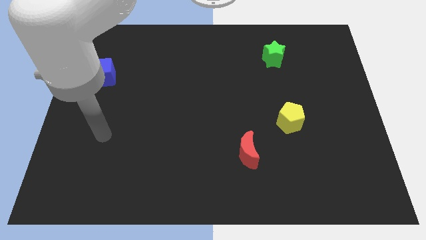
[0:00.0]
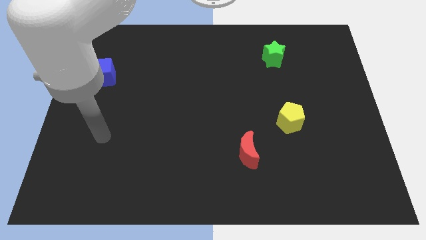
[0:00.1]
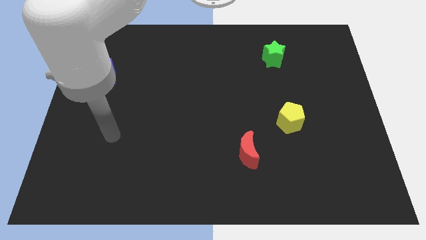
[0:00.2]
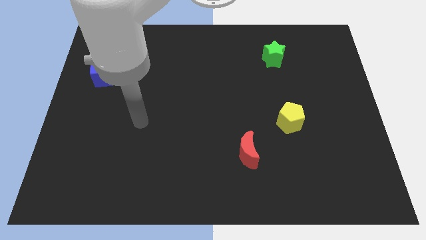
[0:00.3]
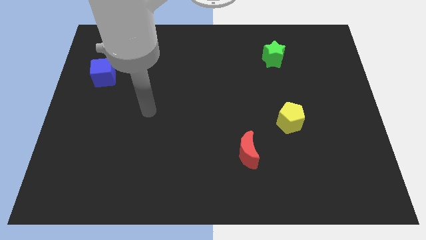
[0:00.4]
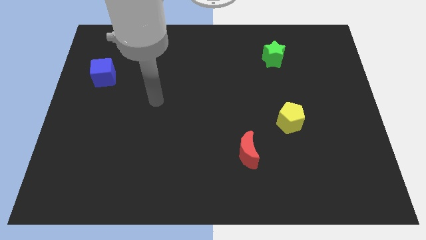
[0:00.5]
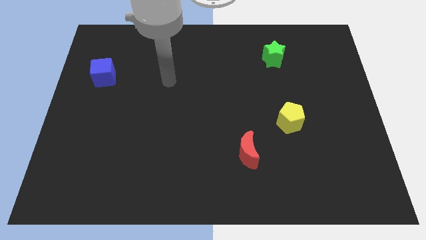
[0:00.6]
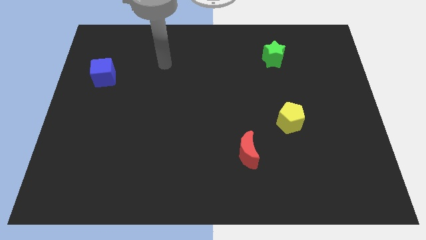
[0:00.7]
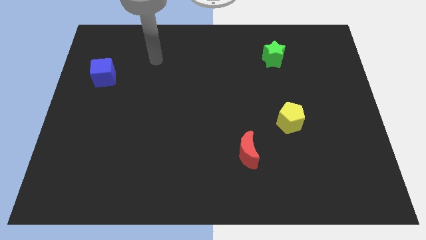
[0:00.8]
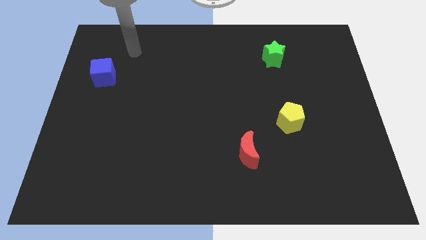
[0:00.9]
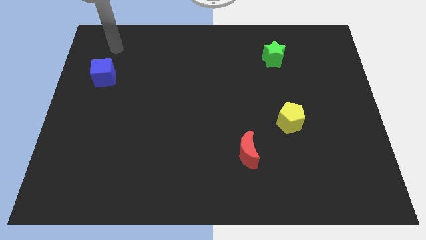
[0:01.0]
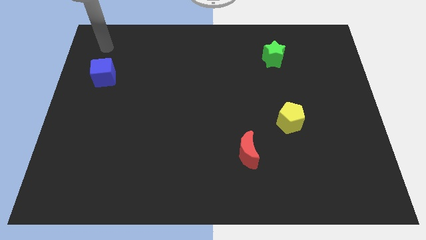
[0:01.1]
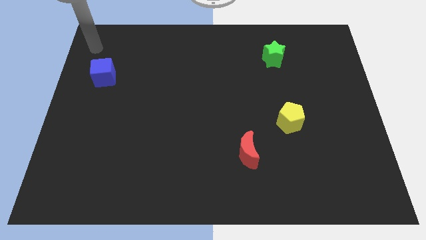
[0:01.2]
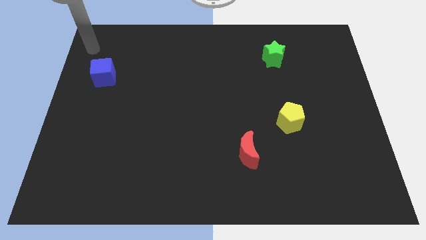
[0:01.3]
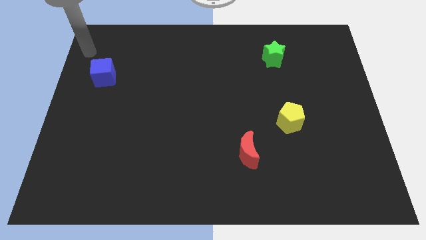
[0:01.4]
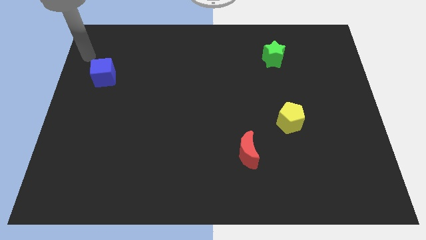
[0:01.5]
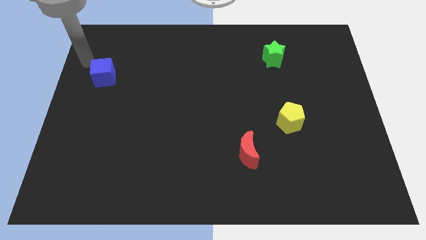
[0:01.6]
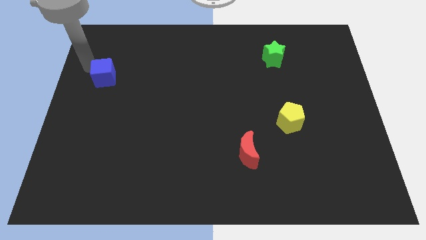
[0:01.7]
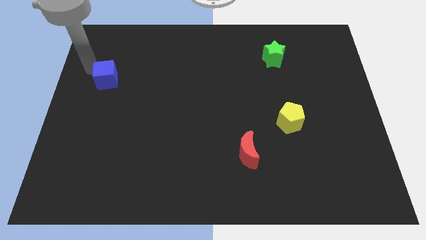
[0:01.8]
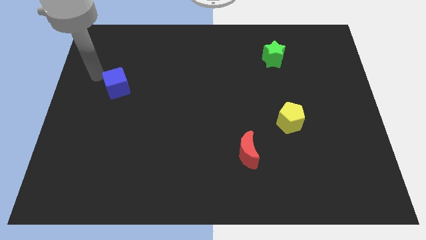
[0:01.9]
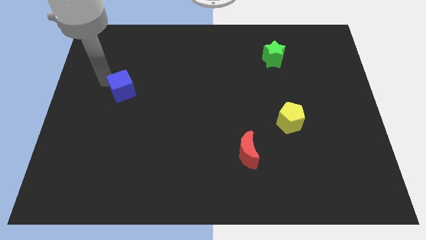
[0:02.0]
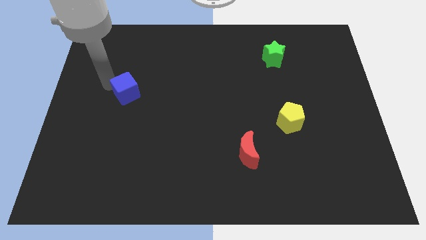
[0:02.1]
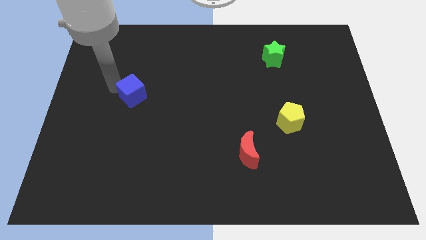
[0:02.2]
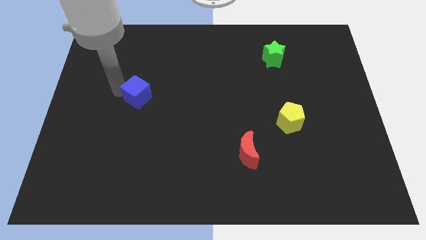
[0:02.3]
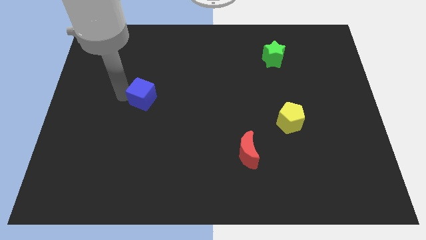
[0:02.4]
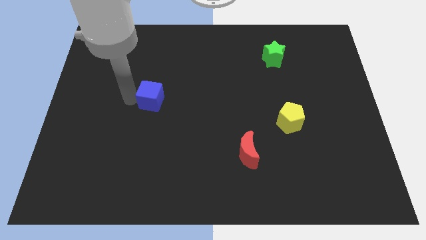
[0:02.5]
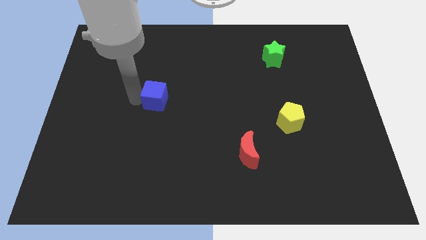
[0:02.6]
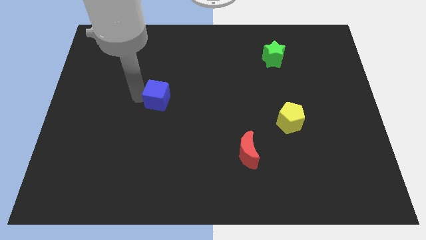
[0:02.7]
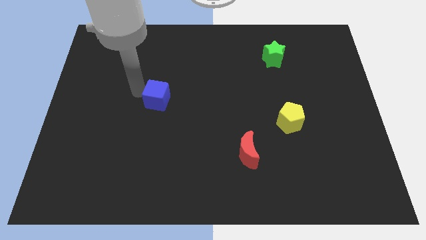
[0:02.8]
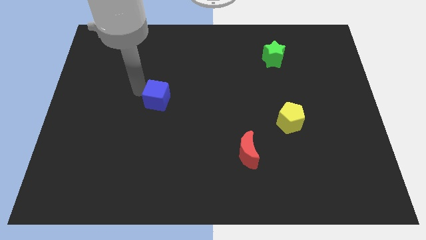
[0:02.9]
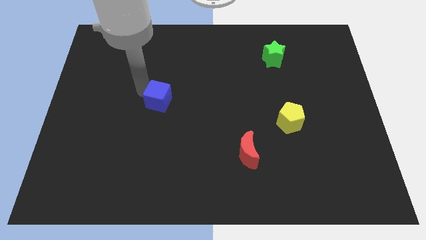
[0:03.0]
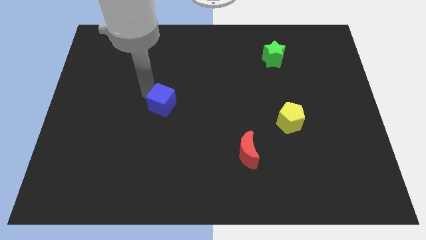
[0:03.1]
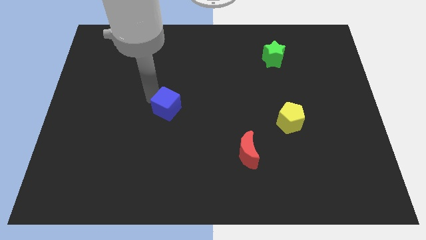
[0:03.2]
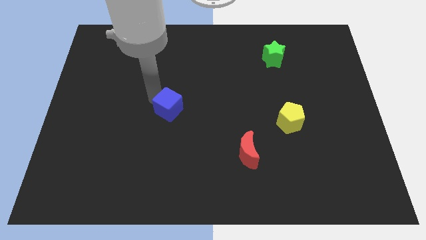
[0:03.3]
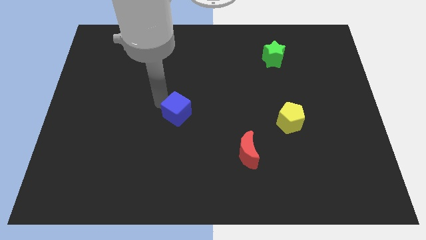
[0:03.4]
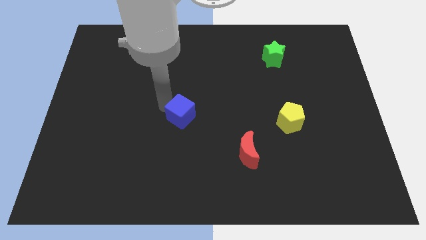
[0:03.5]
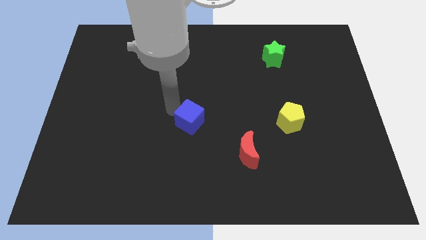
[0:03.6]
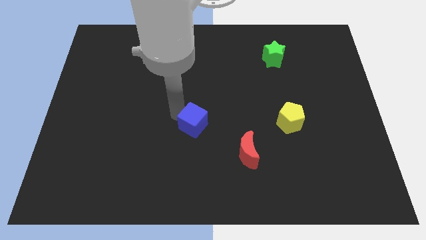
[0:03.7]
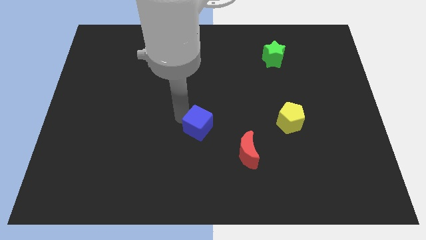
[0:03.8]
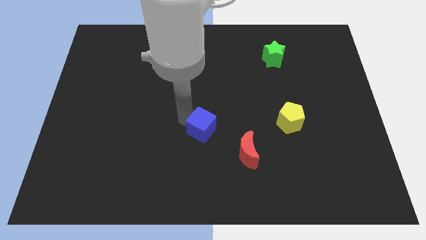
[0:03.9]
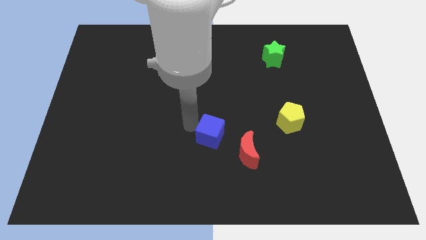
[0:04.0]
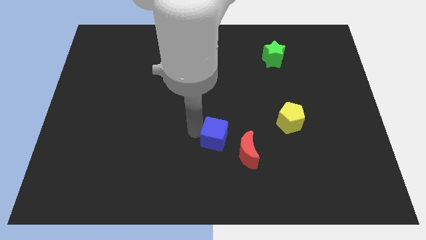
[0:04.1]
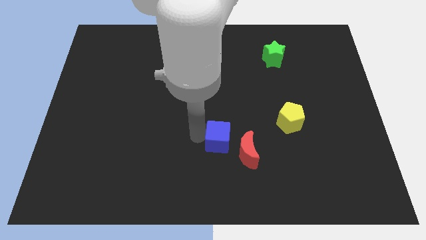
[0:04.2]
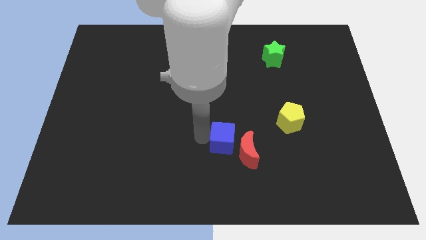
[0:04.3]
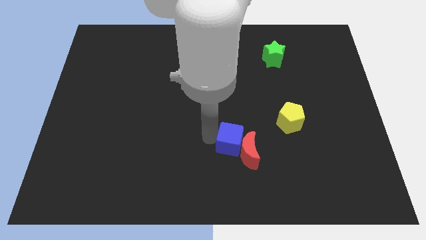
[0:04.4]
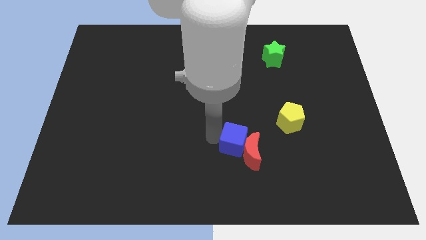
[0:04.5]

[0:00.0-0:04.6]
push the blue block close to the red block

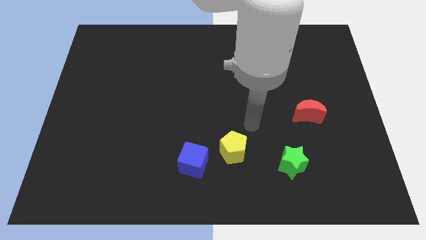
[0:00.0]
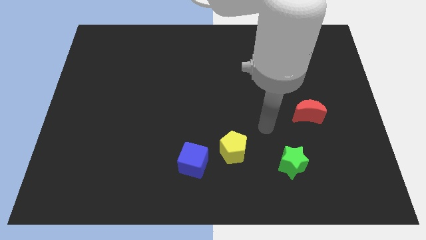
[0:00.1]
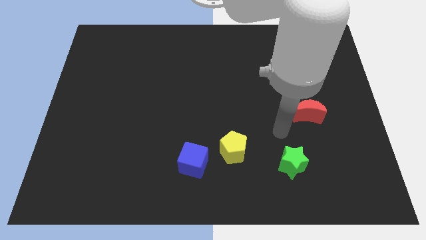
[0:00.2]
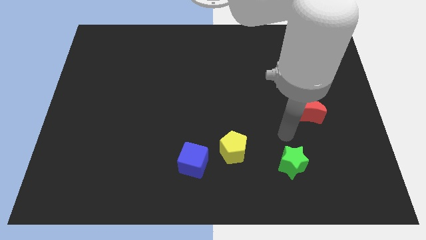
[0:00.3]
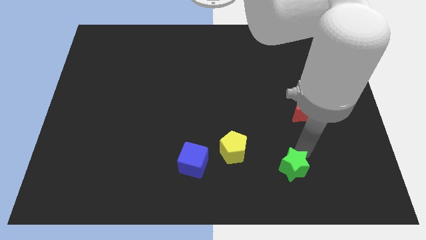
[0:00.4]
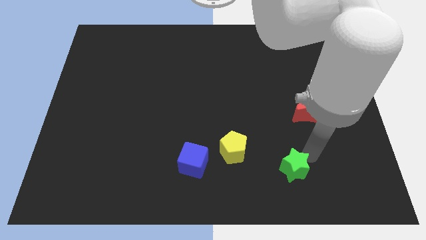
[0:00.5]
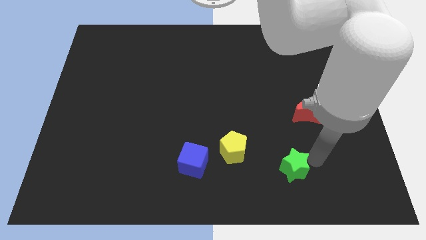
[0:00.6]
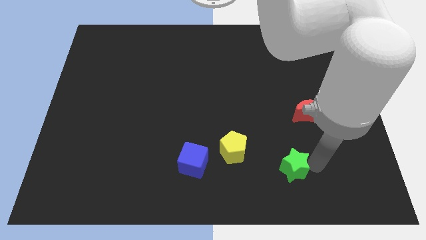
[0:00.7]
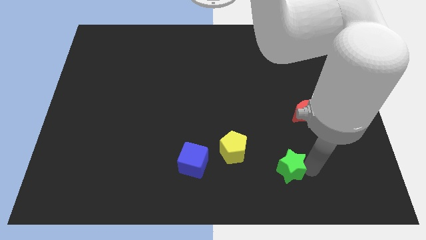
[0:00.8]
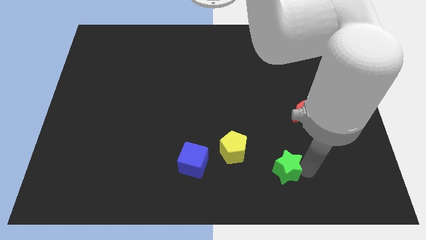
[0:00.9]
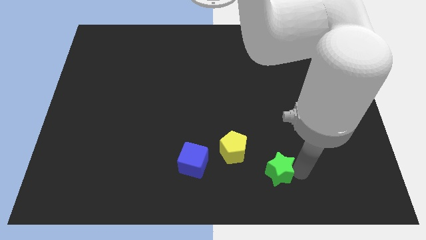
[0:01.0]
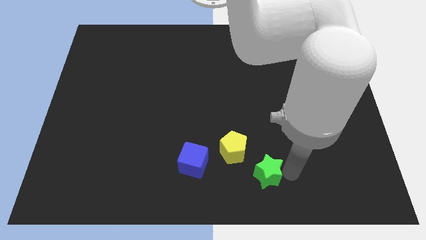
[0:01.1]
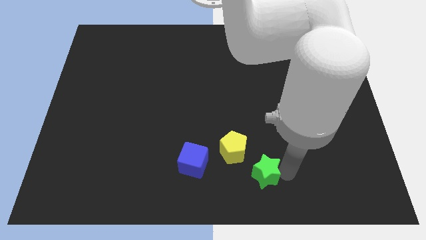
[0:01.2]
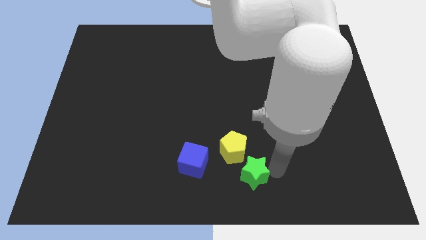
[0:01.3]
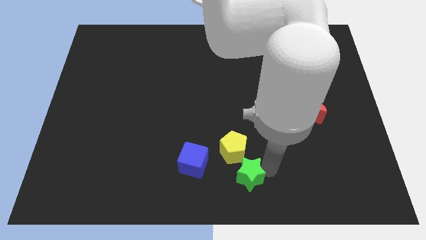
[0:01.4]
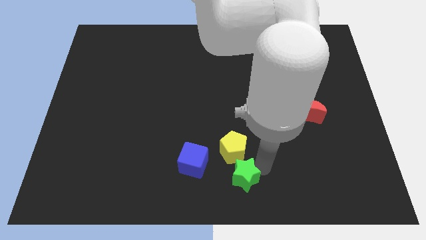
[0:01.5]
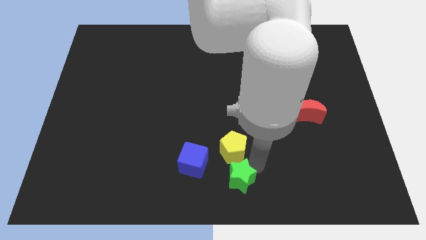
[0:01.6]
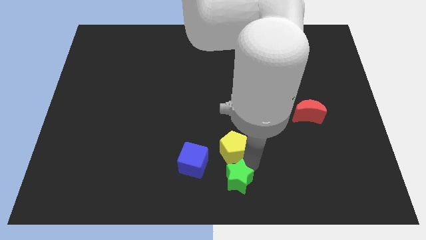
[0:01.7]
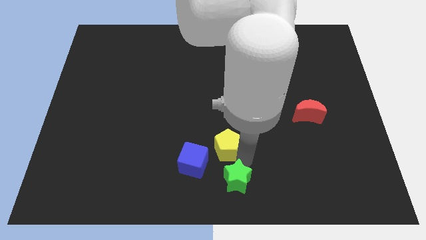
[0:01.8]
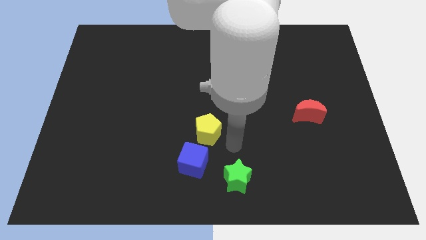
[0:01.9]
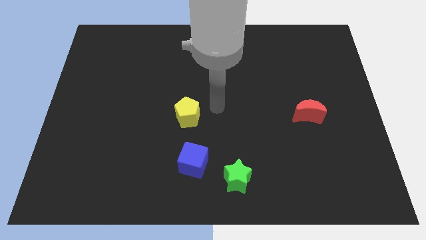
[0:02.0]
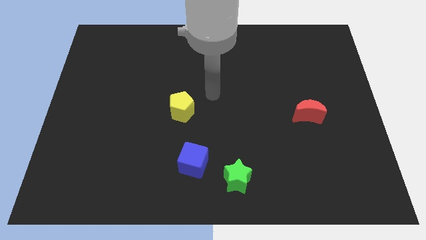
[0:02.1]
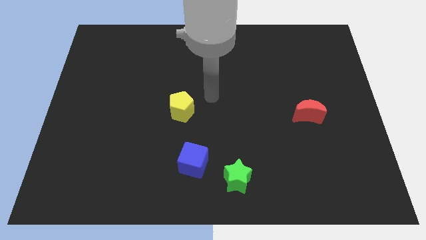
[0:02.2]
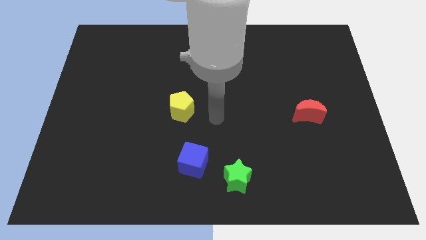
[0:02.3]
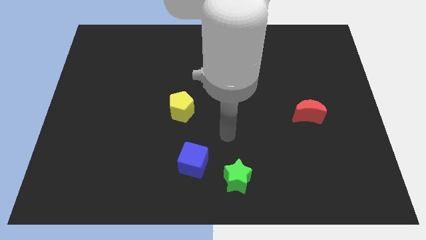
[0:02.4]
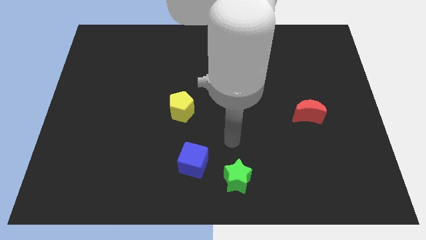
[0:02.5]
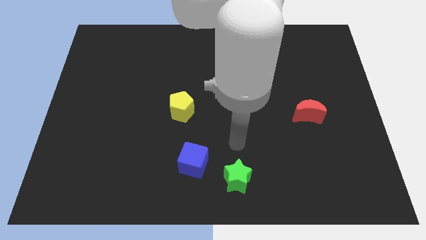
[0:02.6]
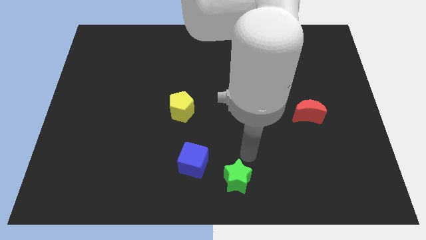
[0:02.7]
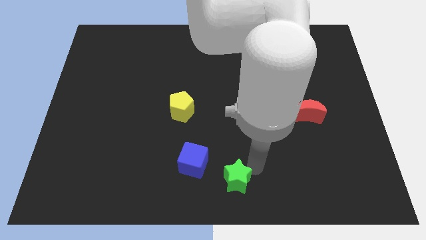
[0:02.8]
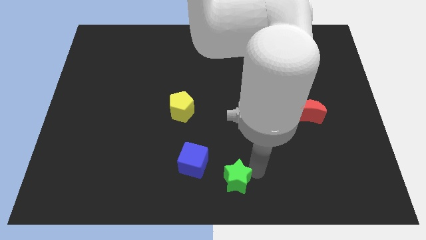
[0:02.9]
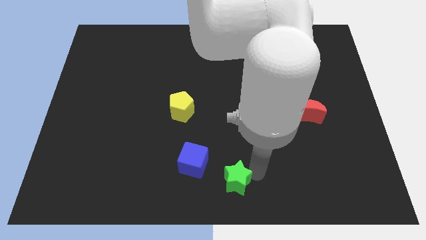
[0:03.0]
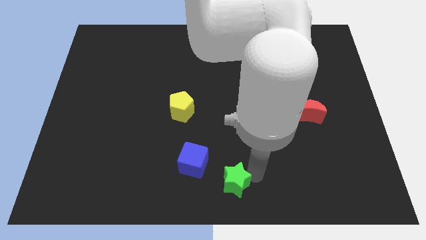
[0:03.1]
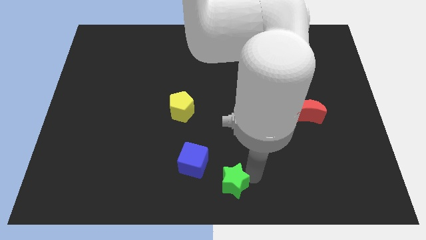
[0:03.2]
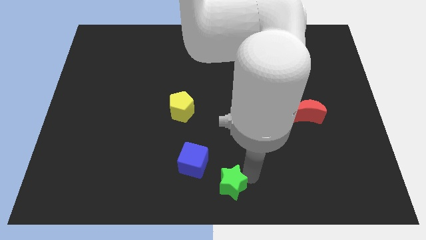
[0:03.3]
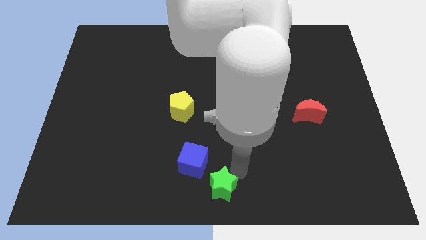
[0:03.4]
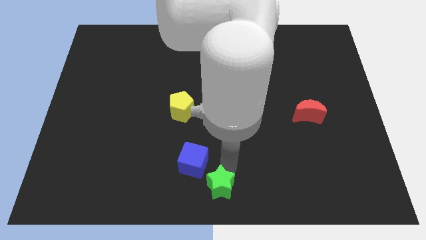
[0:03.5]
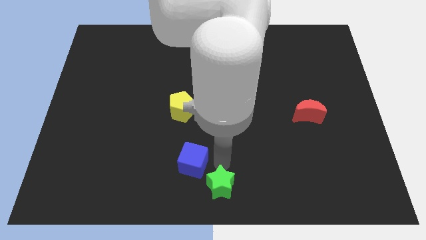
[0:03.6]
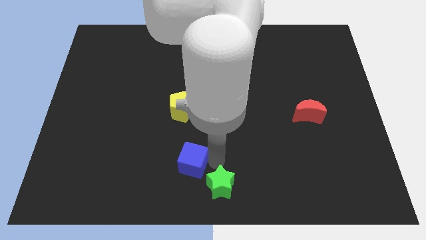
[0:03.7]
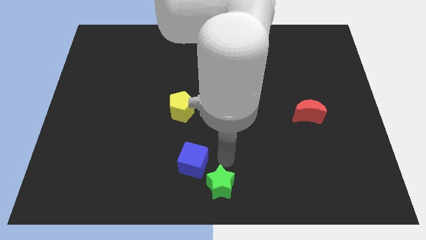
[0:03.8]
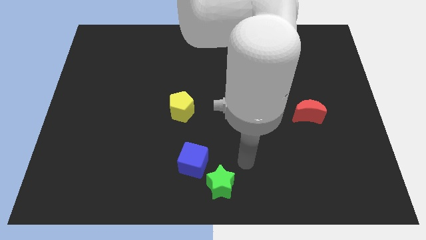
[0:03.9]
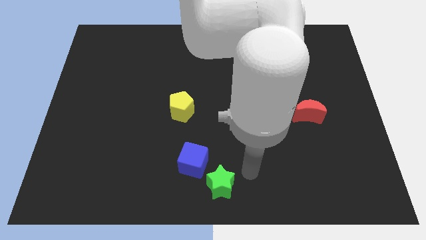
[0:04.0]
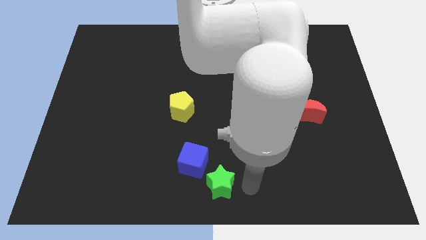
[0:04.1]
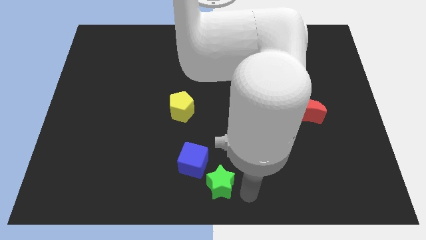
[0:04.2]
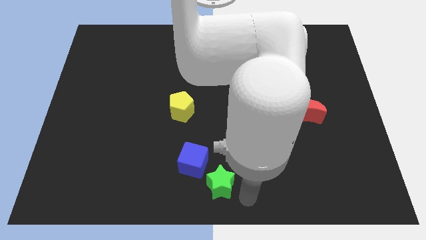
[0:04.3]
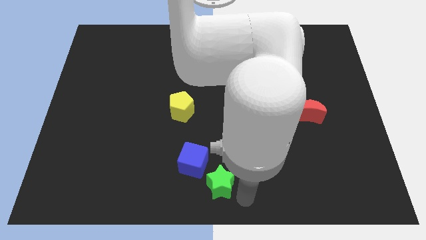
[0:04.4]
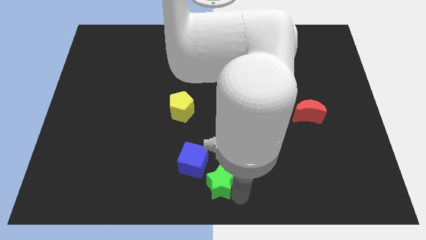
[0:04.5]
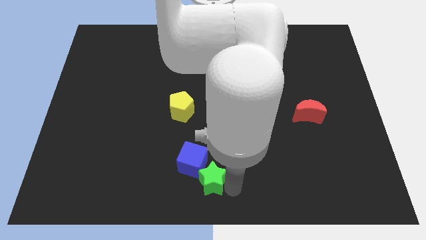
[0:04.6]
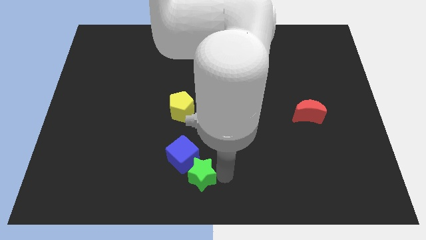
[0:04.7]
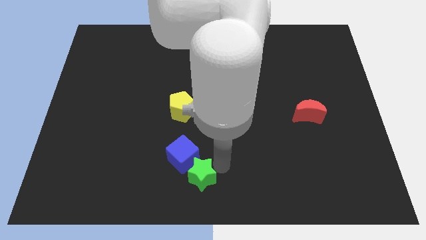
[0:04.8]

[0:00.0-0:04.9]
put the green star close to the blue cube
